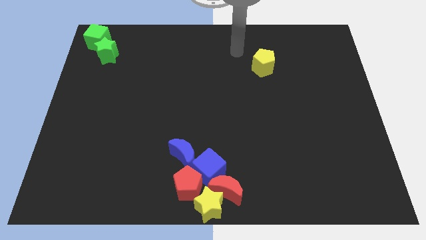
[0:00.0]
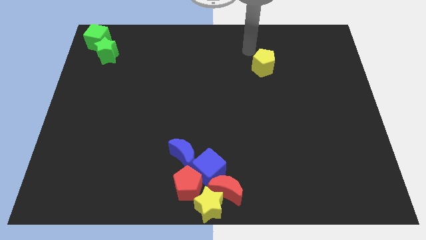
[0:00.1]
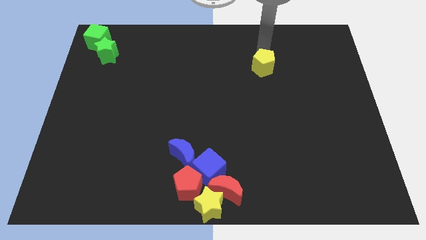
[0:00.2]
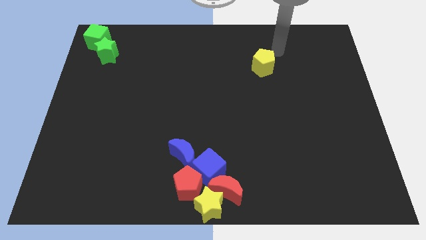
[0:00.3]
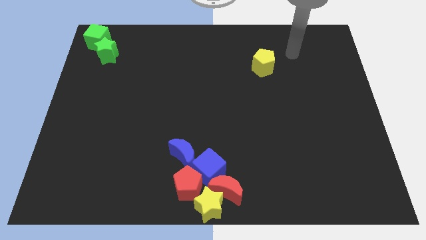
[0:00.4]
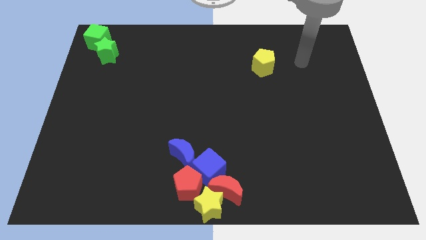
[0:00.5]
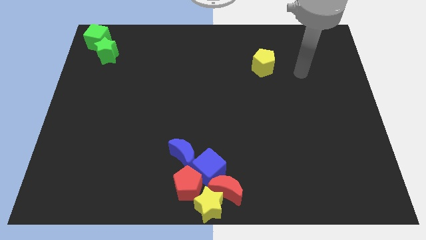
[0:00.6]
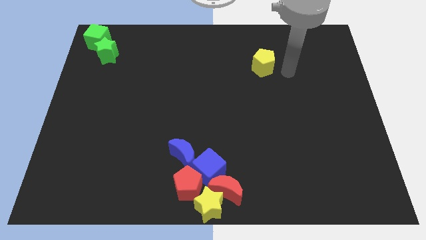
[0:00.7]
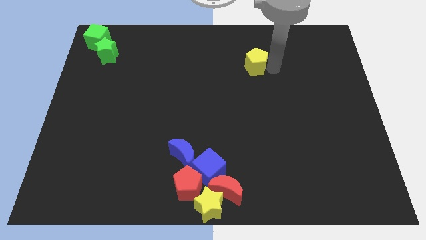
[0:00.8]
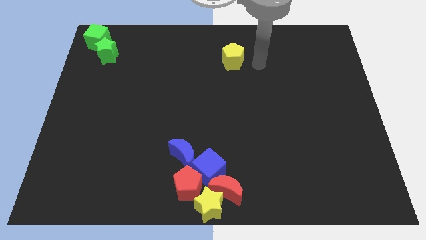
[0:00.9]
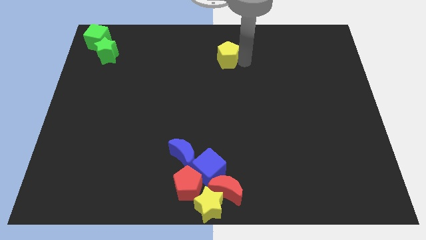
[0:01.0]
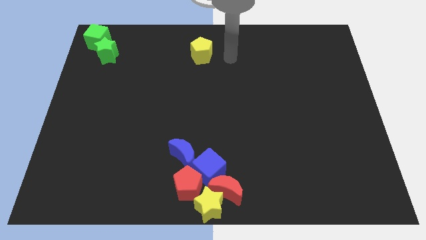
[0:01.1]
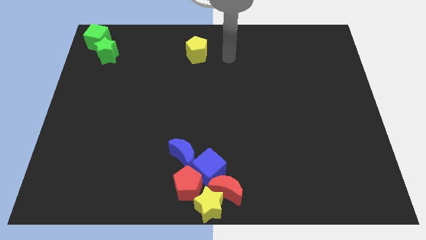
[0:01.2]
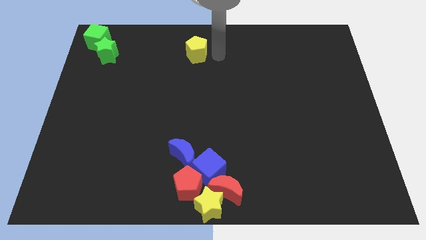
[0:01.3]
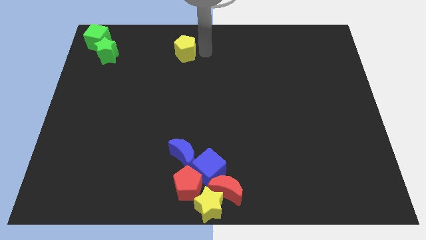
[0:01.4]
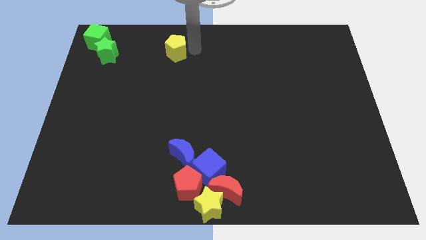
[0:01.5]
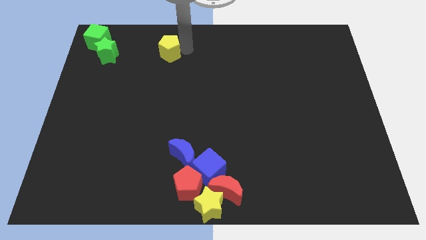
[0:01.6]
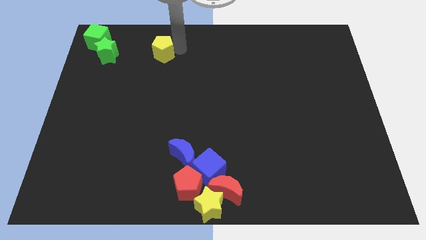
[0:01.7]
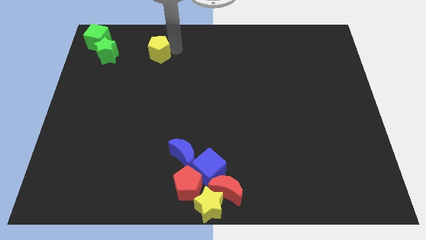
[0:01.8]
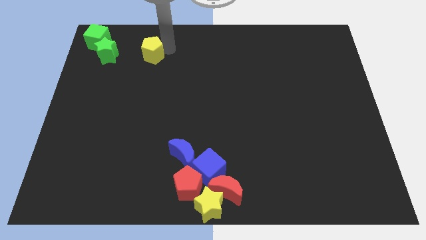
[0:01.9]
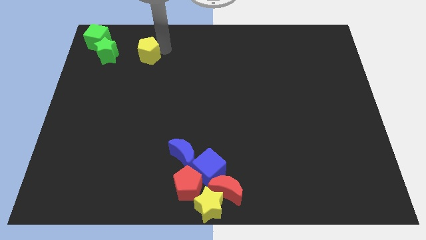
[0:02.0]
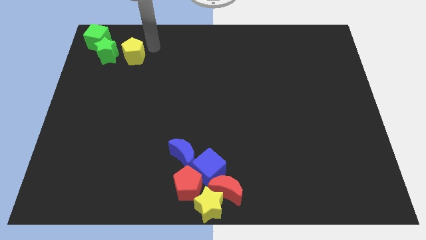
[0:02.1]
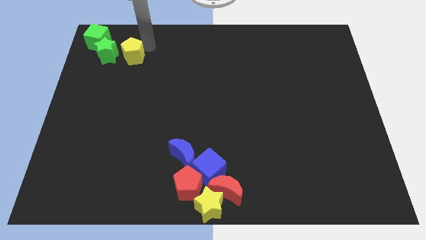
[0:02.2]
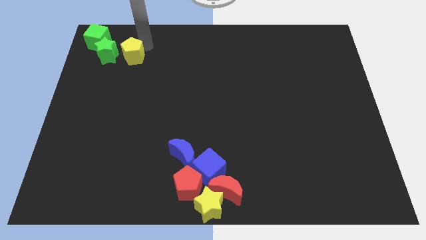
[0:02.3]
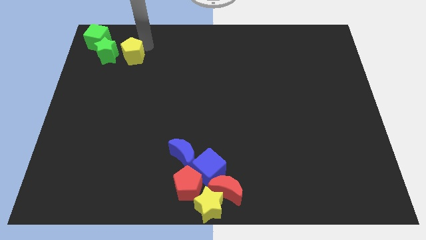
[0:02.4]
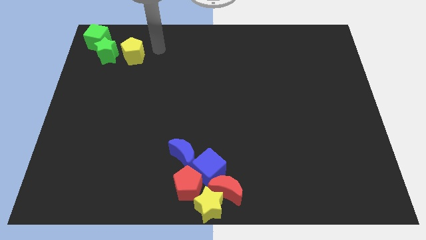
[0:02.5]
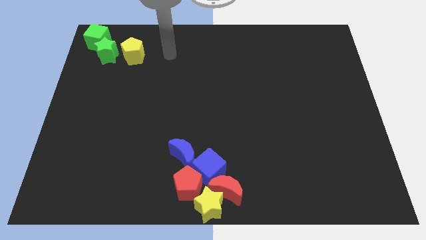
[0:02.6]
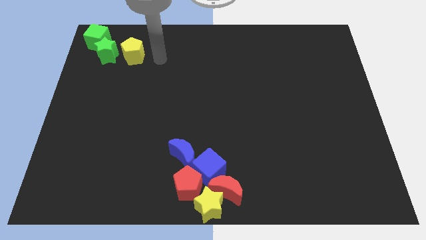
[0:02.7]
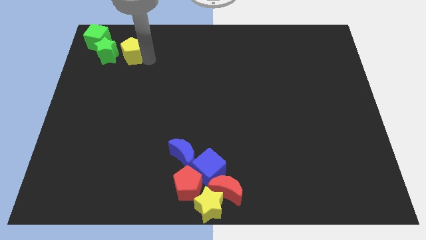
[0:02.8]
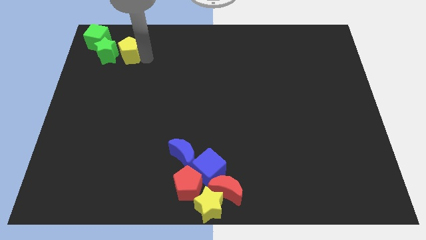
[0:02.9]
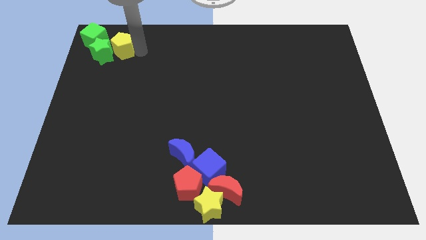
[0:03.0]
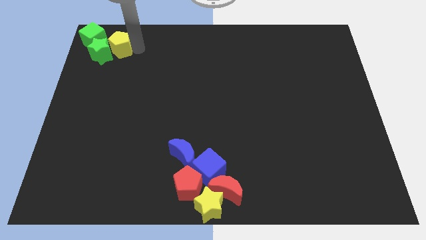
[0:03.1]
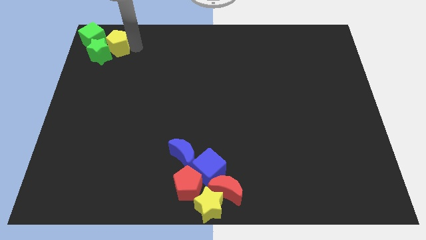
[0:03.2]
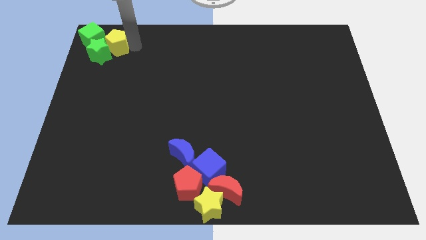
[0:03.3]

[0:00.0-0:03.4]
place the yellow pentagon right to the green star

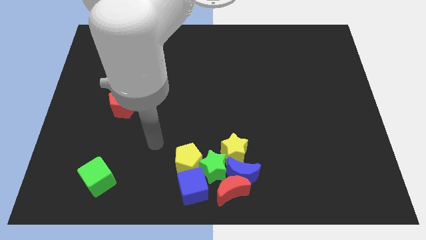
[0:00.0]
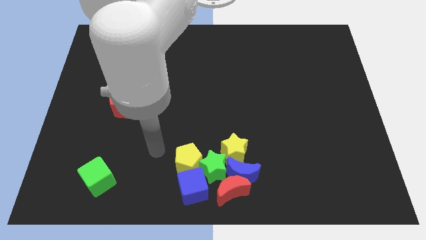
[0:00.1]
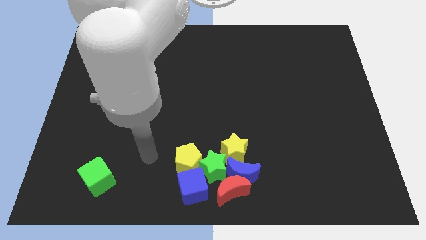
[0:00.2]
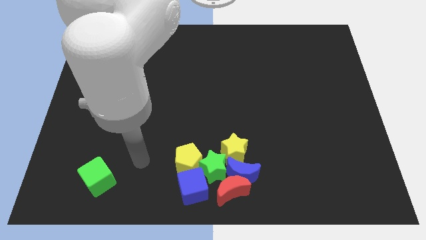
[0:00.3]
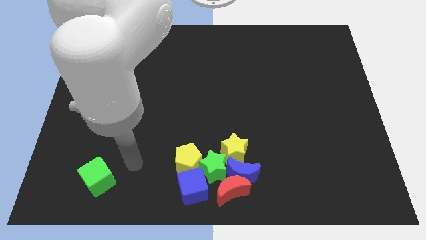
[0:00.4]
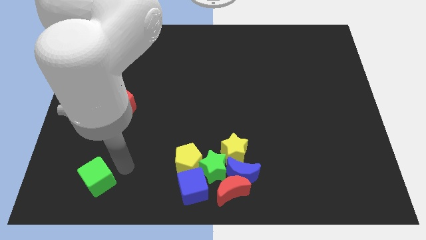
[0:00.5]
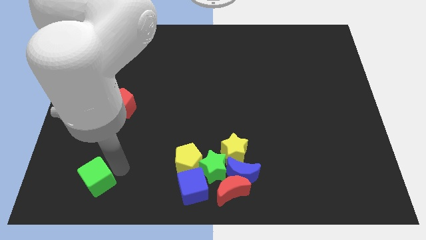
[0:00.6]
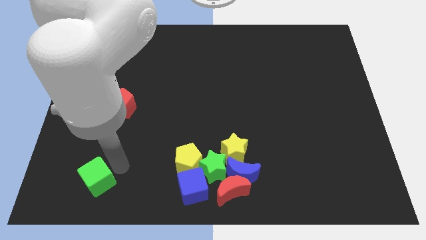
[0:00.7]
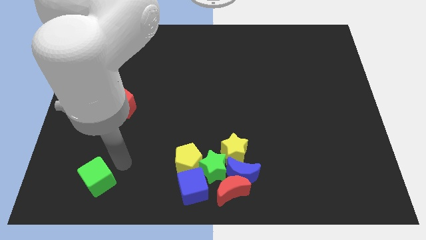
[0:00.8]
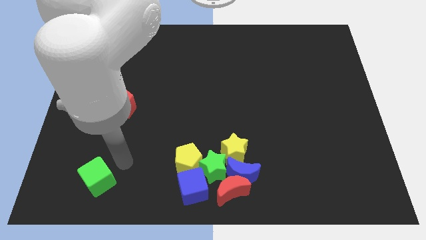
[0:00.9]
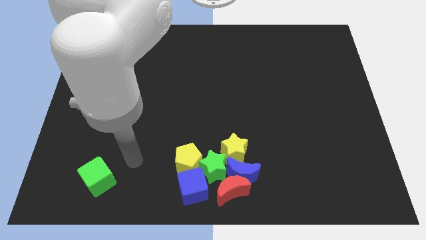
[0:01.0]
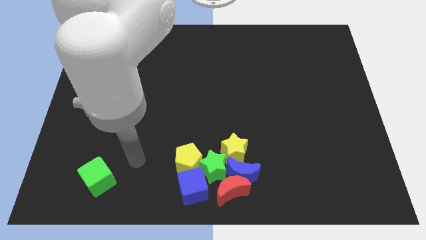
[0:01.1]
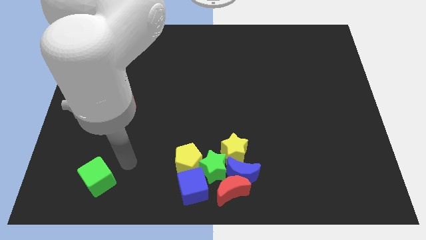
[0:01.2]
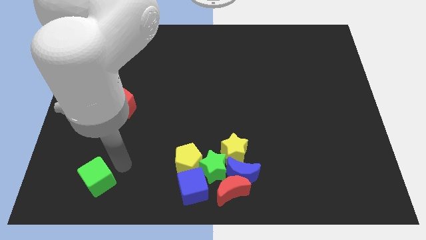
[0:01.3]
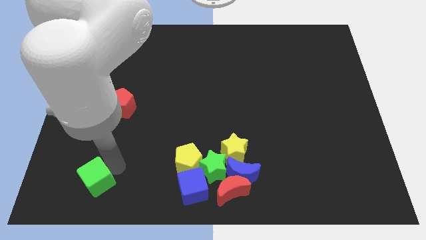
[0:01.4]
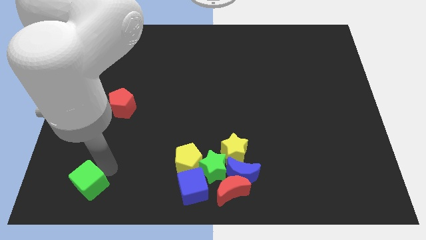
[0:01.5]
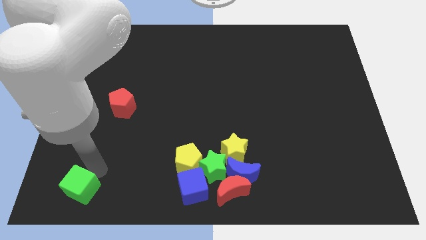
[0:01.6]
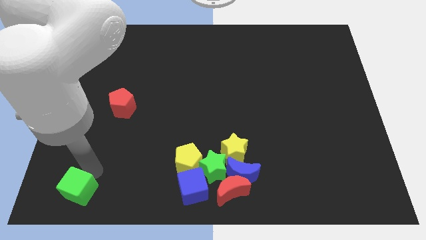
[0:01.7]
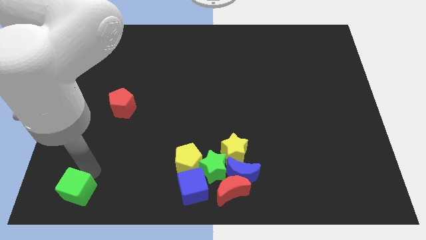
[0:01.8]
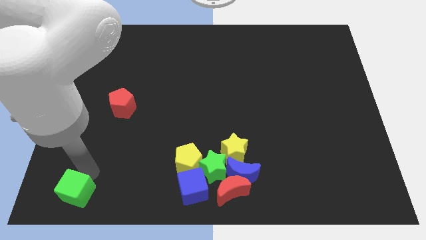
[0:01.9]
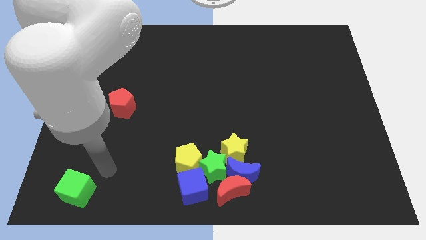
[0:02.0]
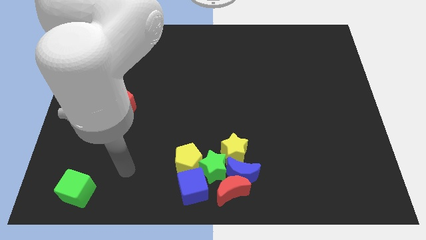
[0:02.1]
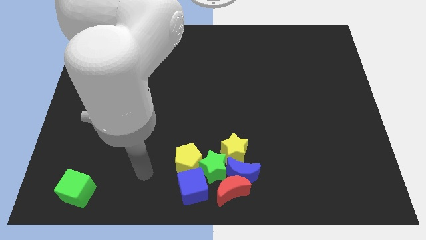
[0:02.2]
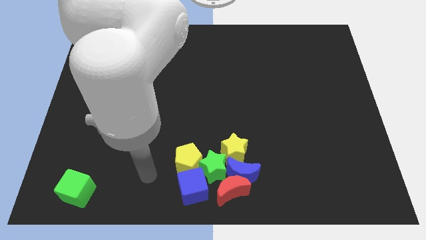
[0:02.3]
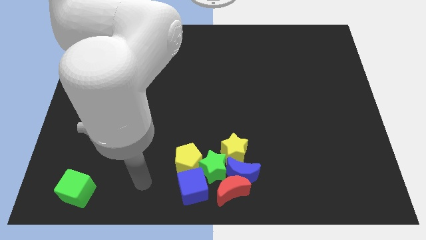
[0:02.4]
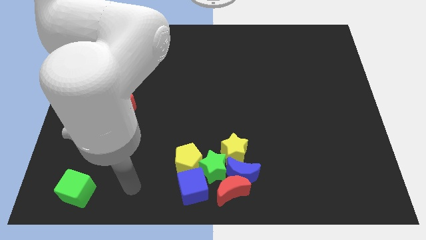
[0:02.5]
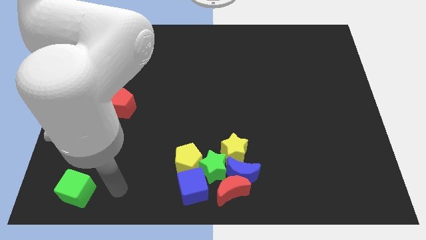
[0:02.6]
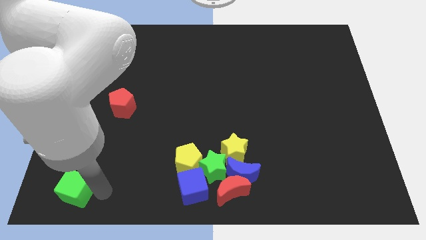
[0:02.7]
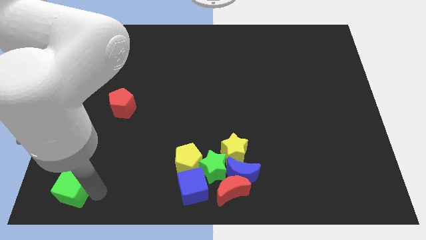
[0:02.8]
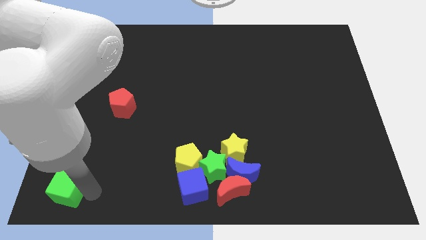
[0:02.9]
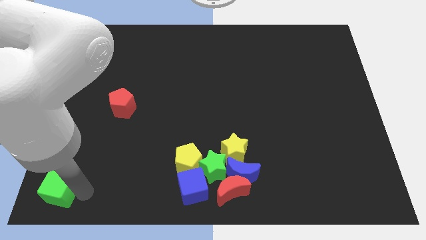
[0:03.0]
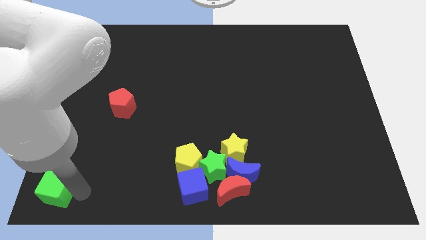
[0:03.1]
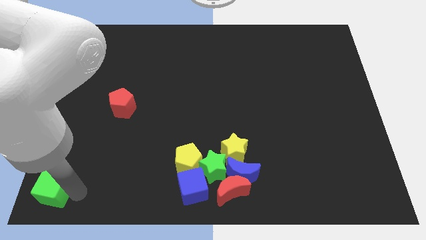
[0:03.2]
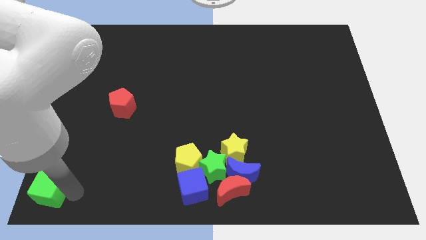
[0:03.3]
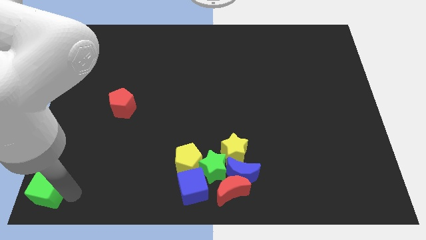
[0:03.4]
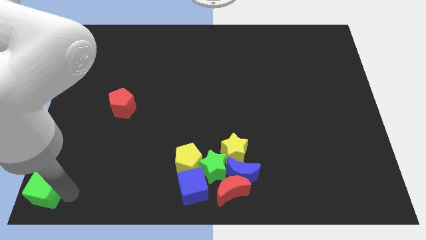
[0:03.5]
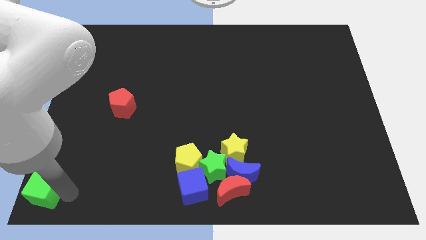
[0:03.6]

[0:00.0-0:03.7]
push the green cube to the bottom left corner

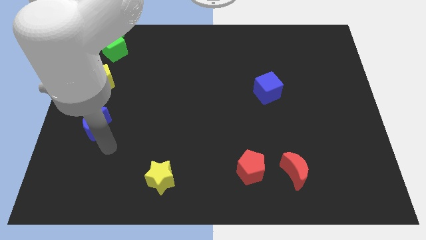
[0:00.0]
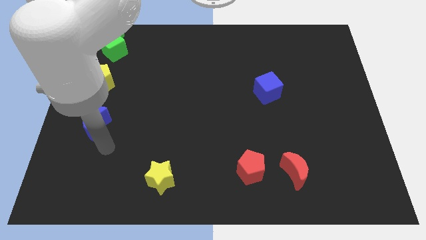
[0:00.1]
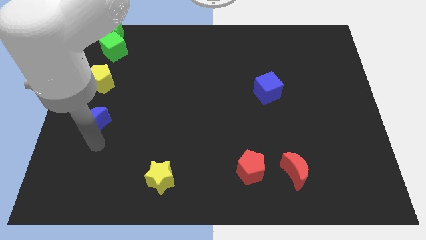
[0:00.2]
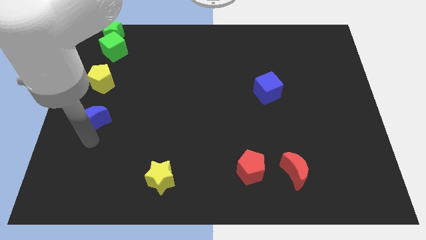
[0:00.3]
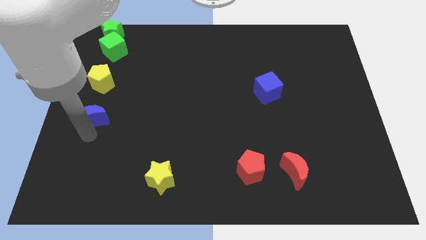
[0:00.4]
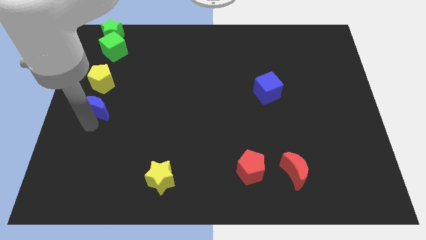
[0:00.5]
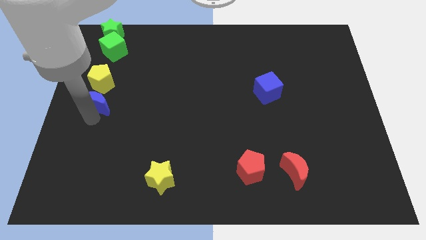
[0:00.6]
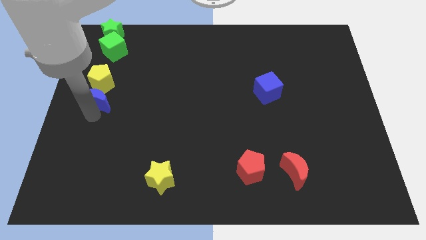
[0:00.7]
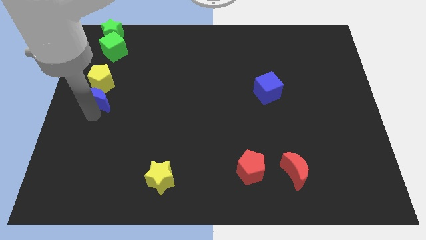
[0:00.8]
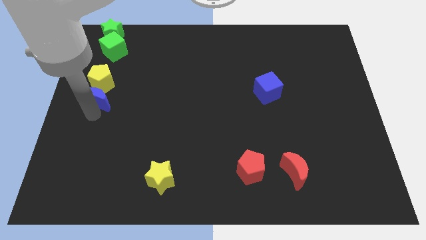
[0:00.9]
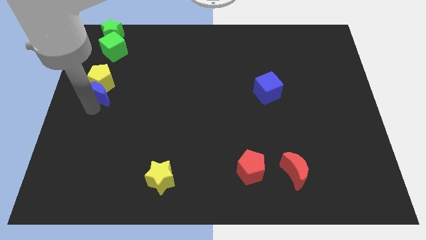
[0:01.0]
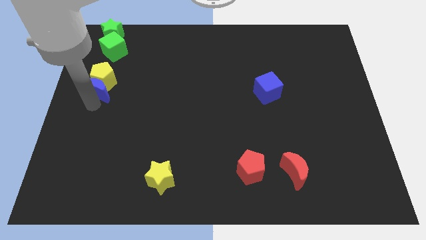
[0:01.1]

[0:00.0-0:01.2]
move blue moon at the bottom of yellow pentagon

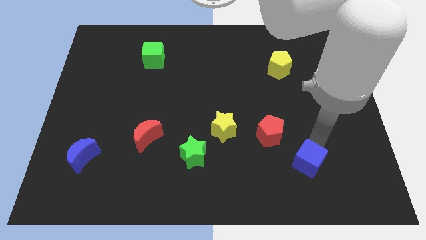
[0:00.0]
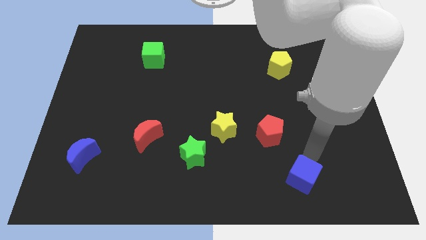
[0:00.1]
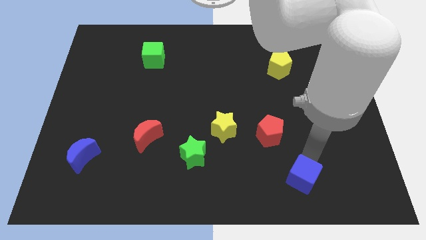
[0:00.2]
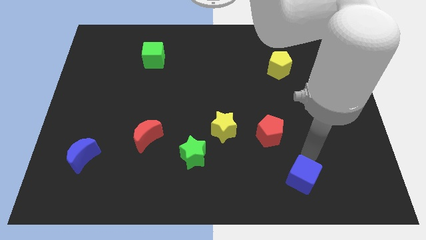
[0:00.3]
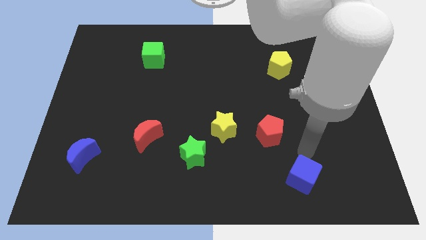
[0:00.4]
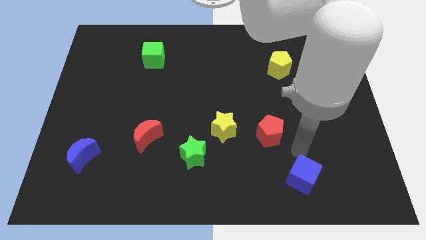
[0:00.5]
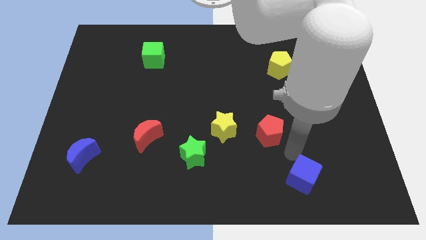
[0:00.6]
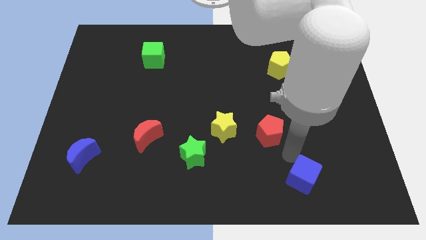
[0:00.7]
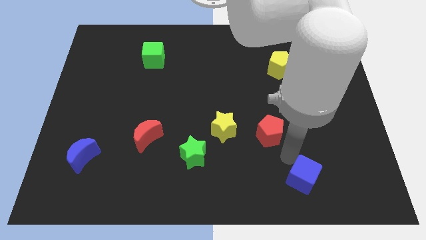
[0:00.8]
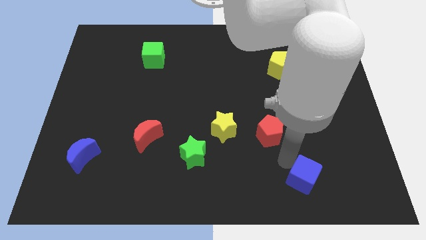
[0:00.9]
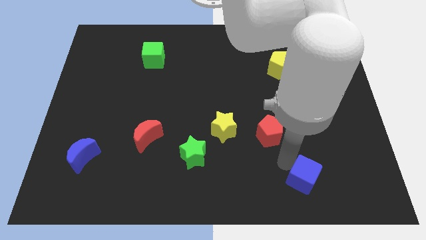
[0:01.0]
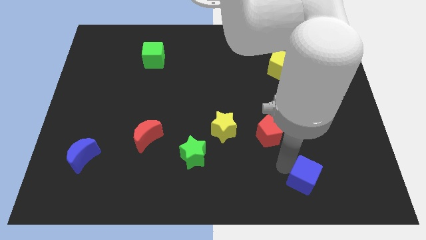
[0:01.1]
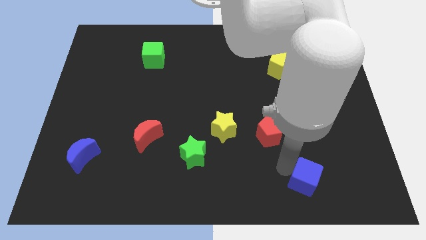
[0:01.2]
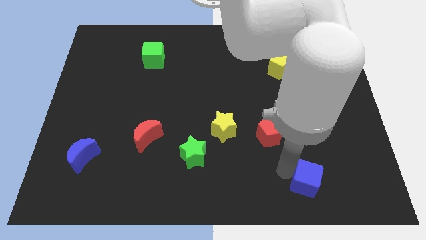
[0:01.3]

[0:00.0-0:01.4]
move the blue cube towards the bottom
